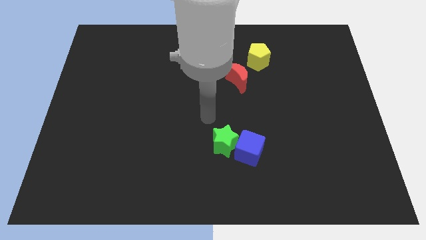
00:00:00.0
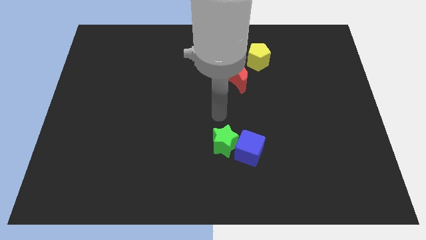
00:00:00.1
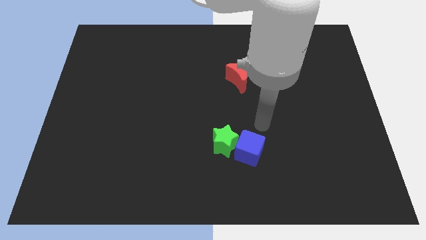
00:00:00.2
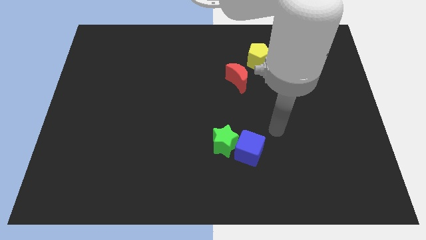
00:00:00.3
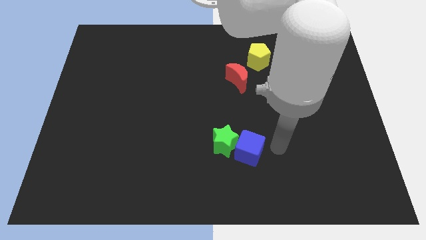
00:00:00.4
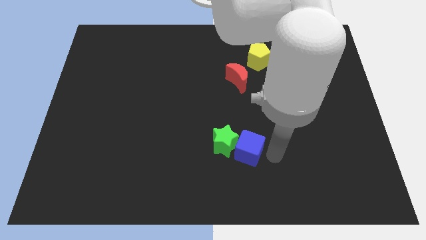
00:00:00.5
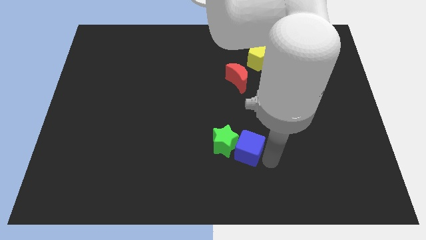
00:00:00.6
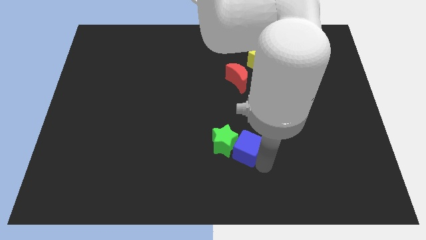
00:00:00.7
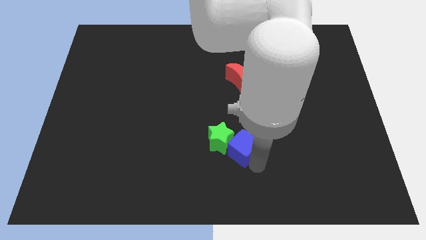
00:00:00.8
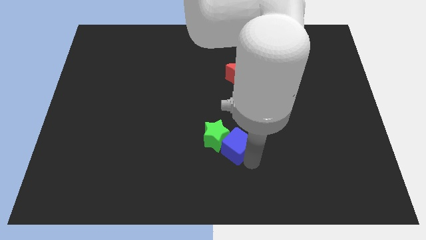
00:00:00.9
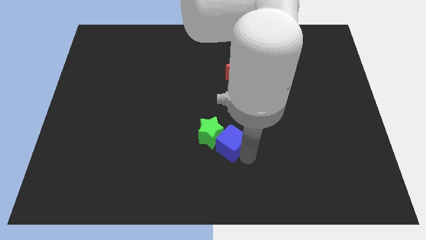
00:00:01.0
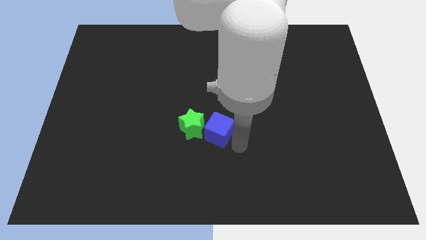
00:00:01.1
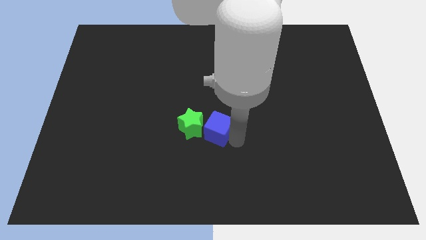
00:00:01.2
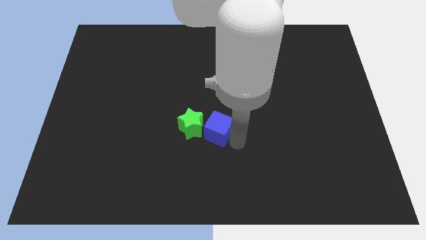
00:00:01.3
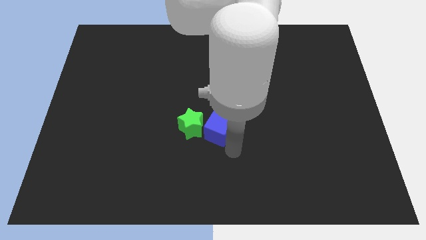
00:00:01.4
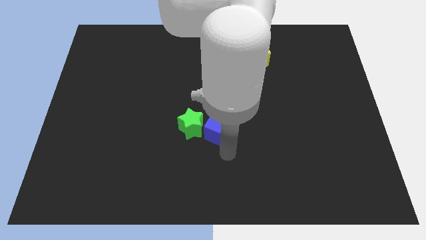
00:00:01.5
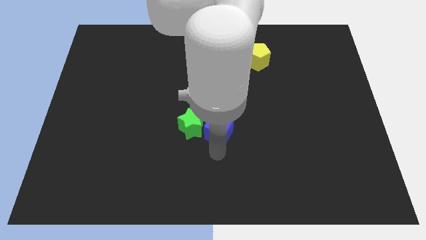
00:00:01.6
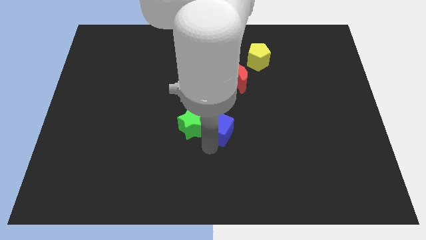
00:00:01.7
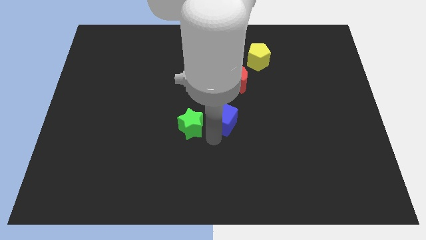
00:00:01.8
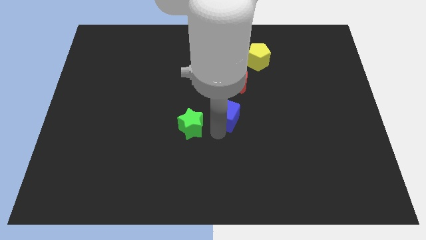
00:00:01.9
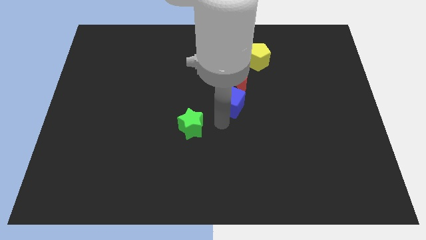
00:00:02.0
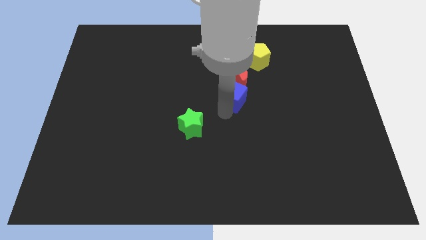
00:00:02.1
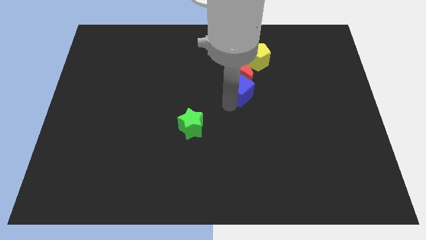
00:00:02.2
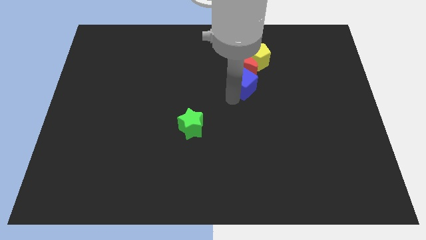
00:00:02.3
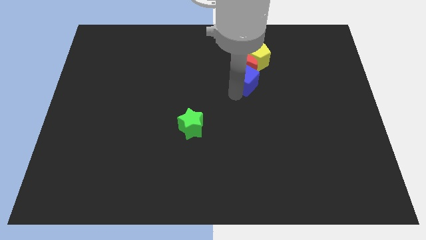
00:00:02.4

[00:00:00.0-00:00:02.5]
move the blue cube next to the red block

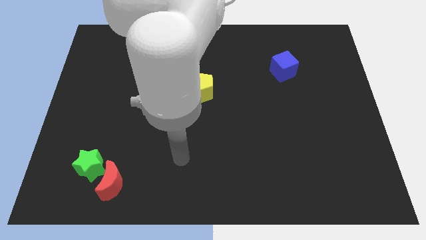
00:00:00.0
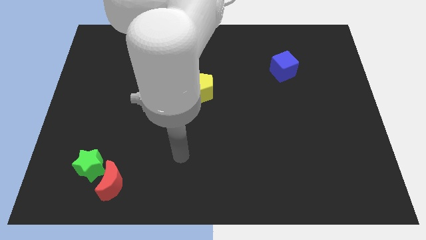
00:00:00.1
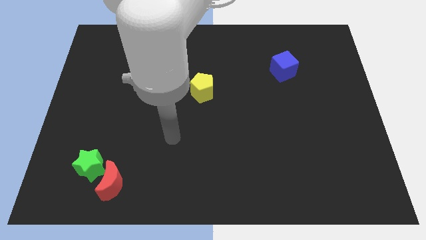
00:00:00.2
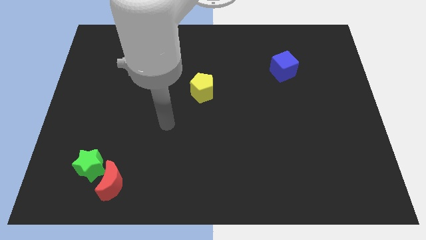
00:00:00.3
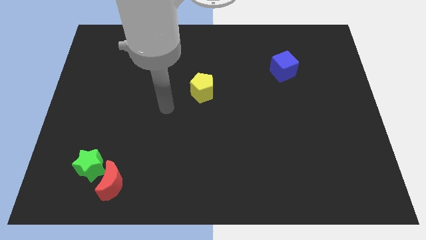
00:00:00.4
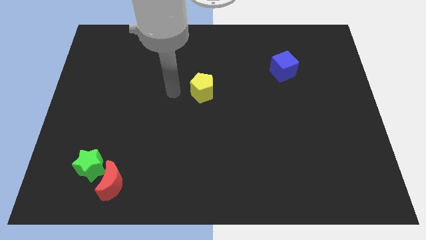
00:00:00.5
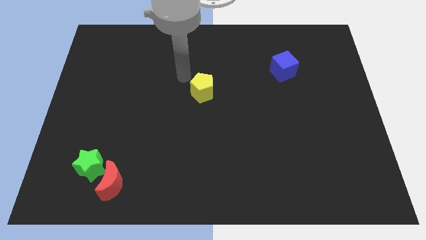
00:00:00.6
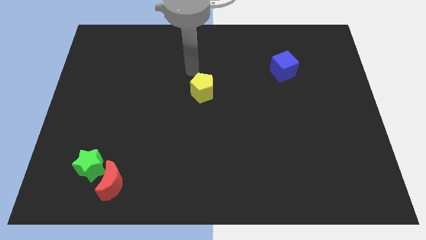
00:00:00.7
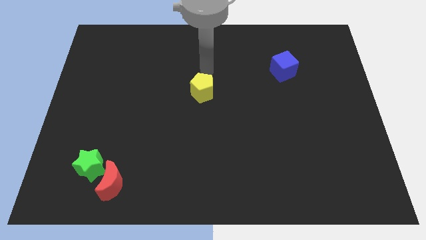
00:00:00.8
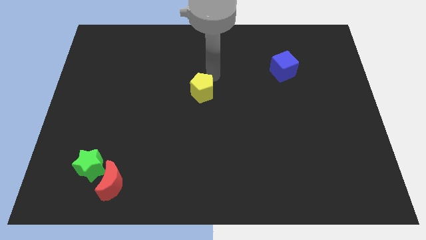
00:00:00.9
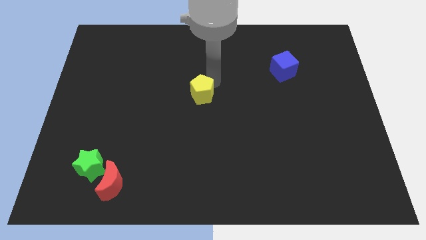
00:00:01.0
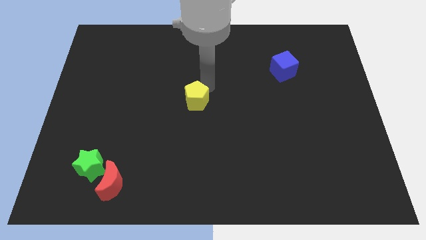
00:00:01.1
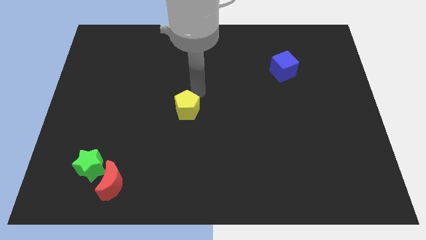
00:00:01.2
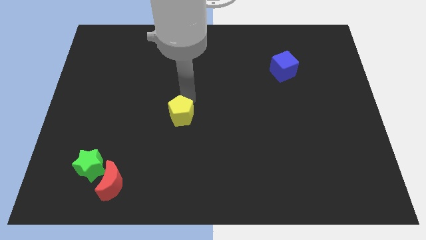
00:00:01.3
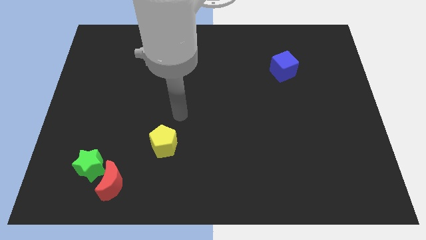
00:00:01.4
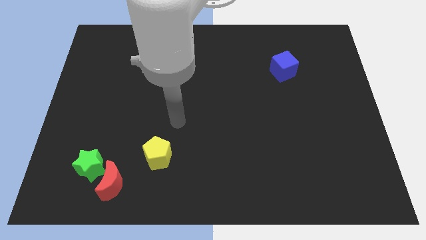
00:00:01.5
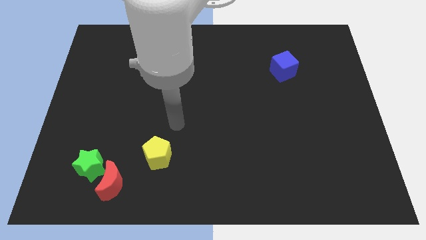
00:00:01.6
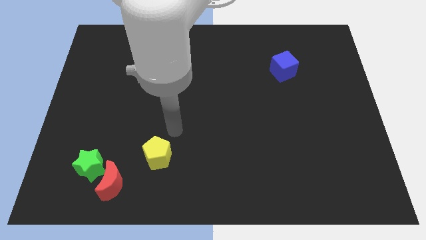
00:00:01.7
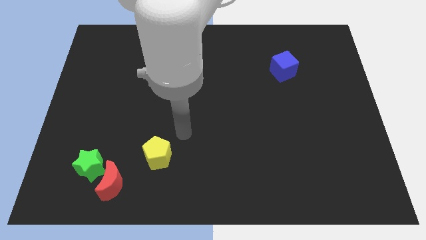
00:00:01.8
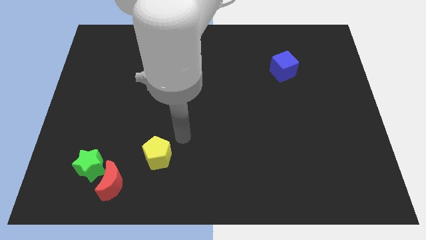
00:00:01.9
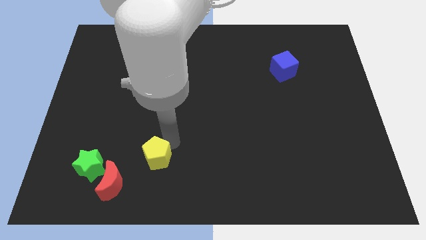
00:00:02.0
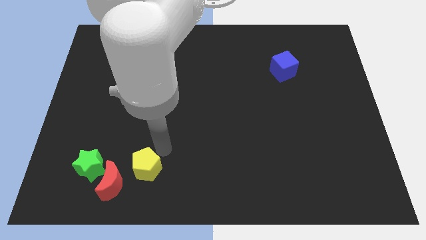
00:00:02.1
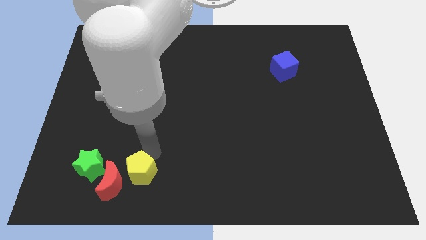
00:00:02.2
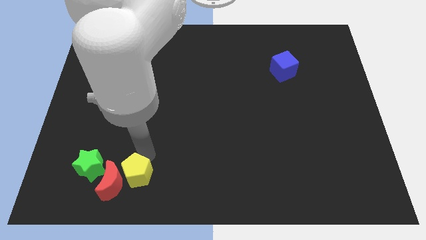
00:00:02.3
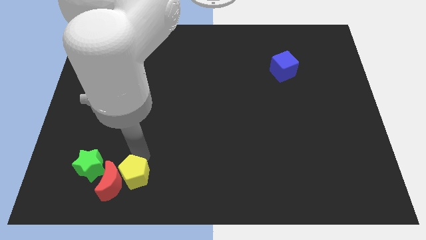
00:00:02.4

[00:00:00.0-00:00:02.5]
put the yellow block next to the red block

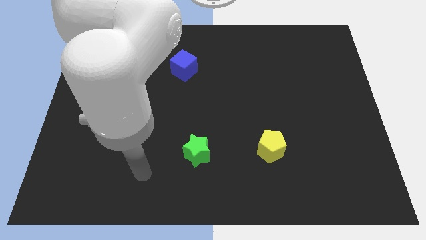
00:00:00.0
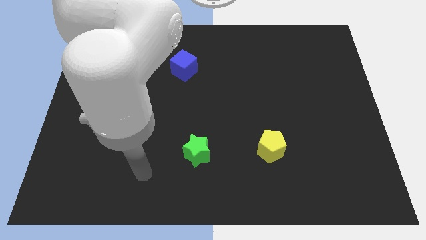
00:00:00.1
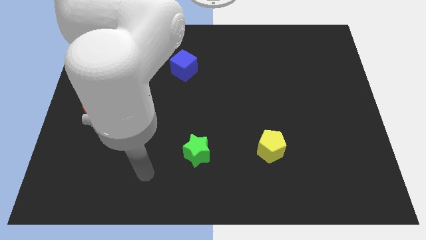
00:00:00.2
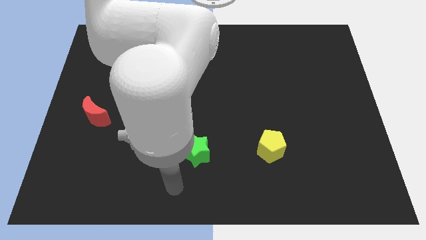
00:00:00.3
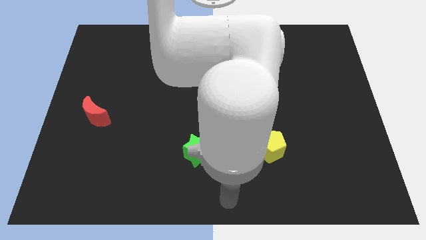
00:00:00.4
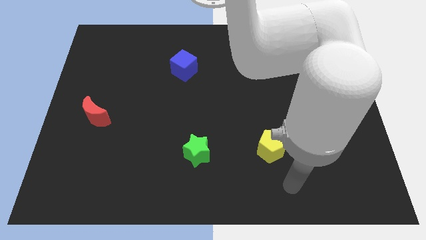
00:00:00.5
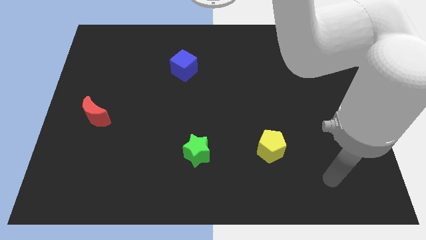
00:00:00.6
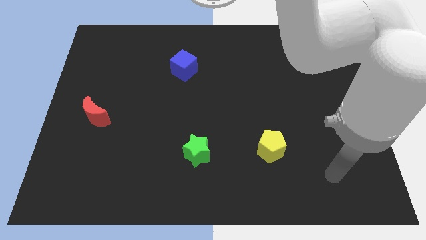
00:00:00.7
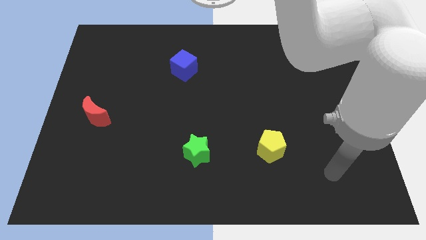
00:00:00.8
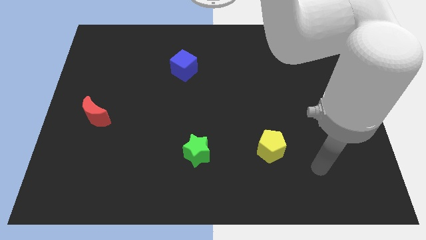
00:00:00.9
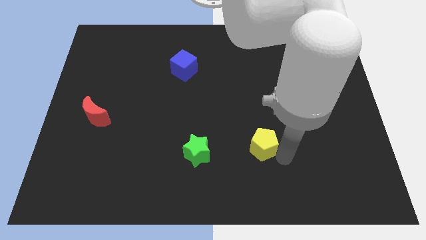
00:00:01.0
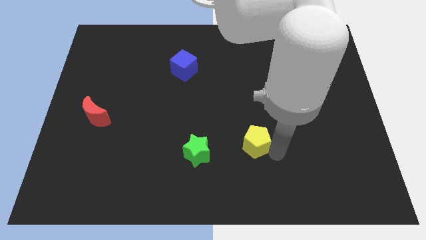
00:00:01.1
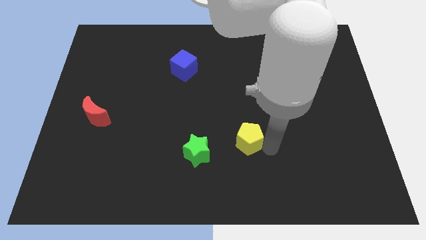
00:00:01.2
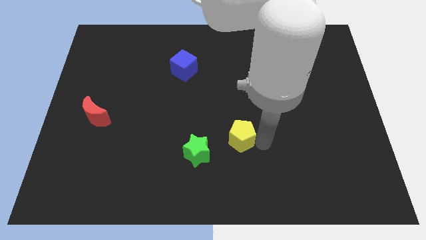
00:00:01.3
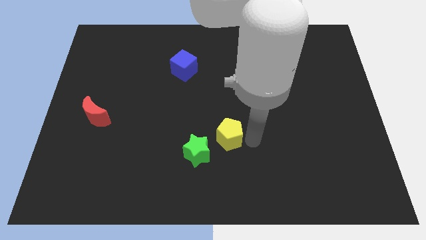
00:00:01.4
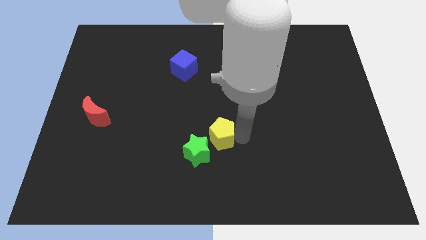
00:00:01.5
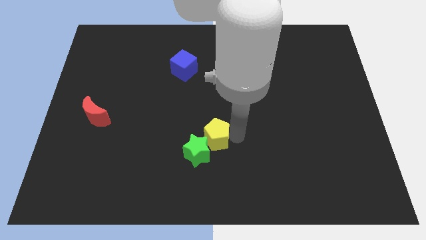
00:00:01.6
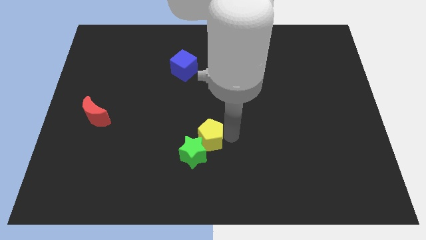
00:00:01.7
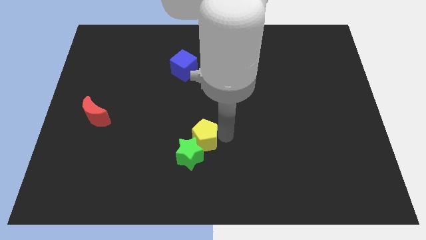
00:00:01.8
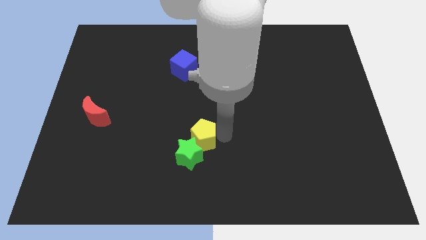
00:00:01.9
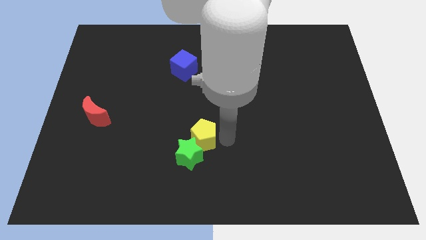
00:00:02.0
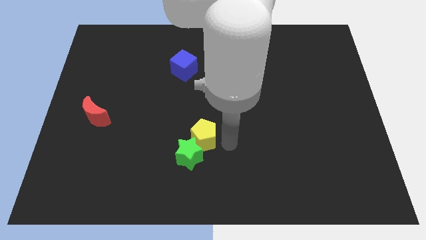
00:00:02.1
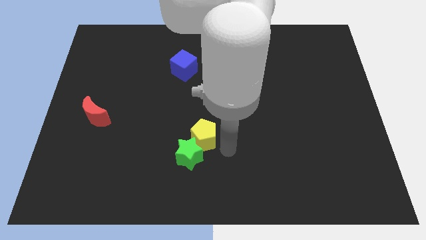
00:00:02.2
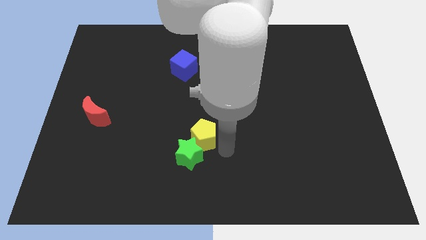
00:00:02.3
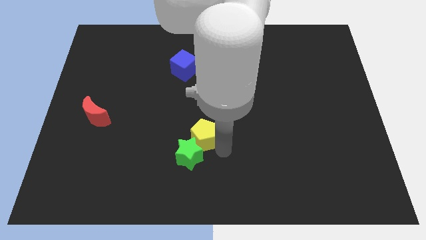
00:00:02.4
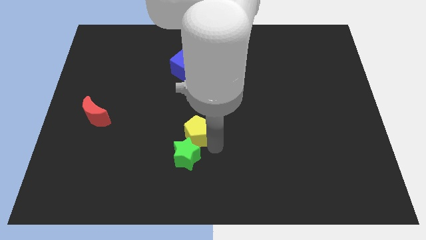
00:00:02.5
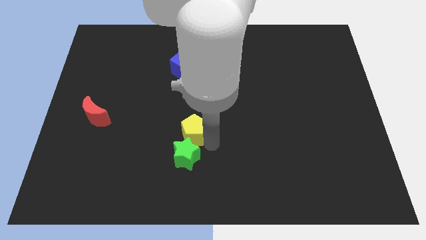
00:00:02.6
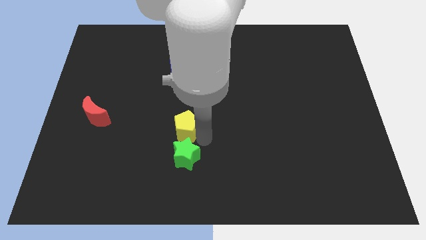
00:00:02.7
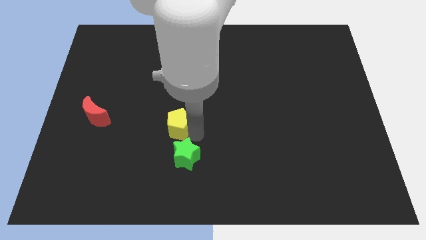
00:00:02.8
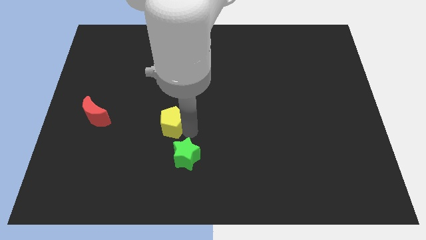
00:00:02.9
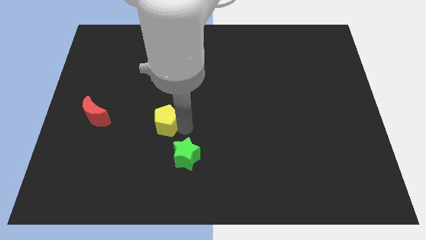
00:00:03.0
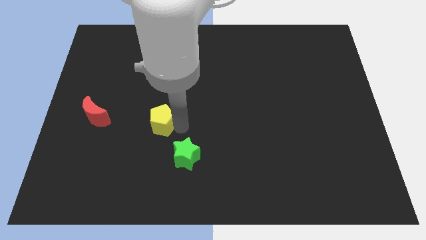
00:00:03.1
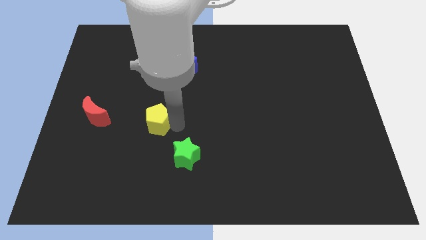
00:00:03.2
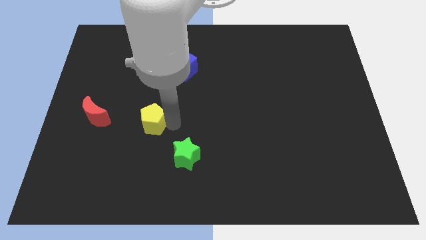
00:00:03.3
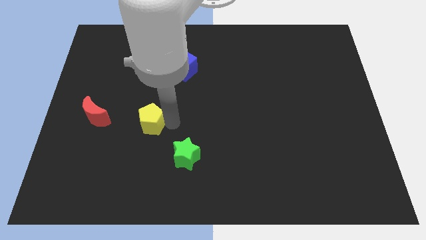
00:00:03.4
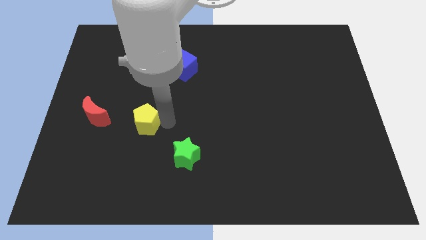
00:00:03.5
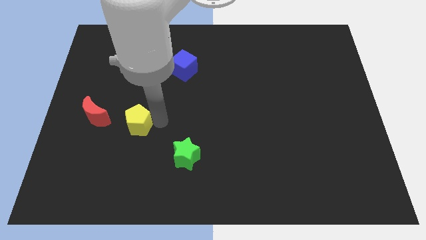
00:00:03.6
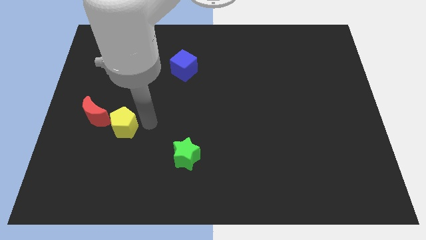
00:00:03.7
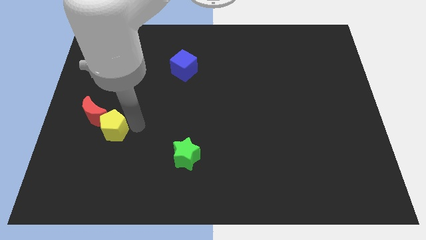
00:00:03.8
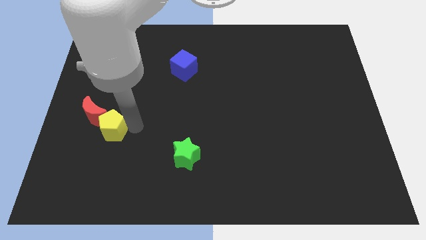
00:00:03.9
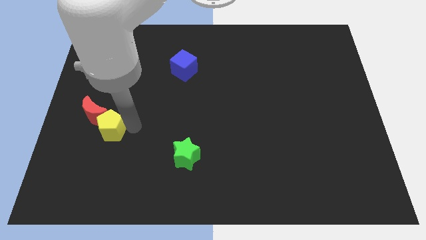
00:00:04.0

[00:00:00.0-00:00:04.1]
put the yellow block to the moon
